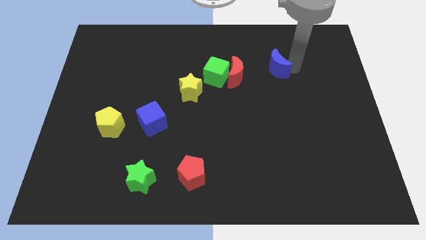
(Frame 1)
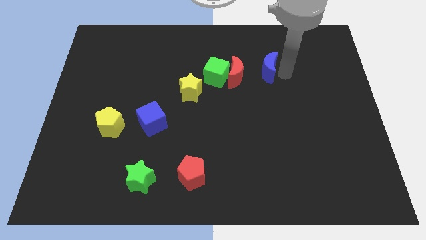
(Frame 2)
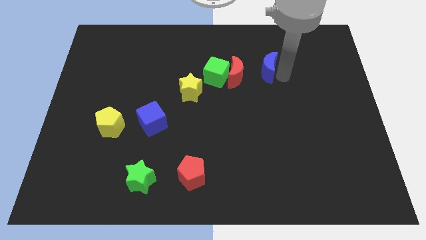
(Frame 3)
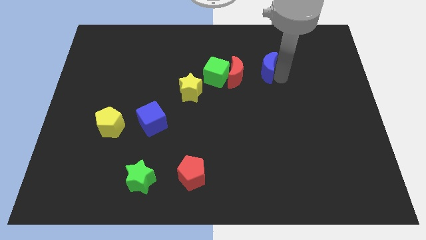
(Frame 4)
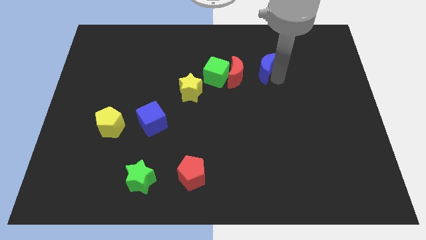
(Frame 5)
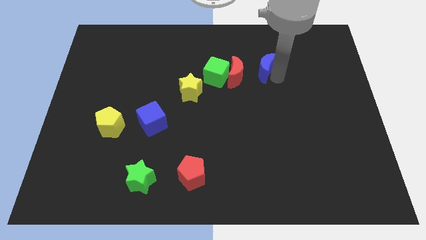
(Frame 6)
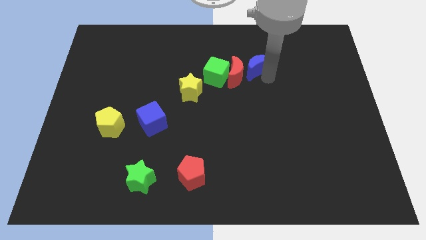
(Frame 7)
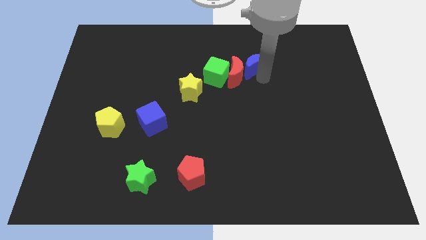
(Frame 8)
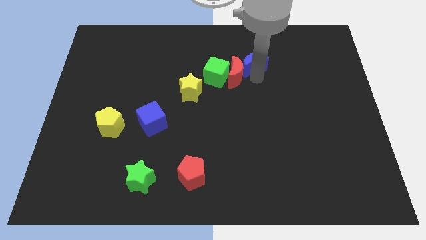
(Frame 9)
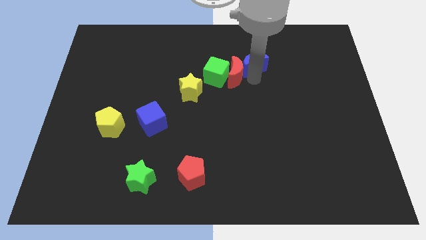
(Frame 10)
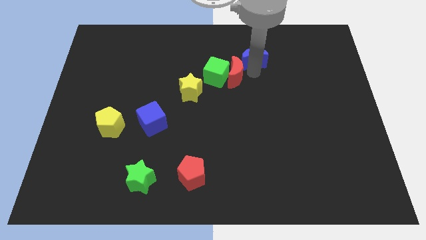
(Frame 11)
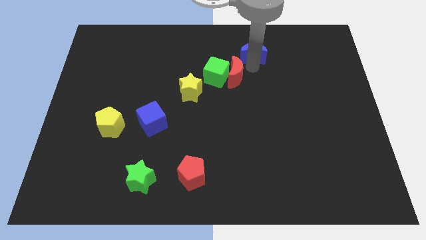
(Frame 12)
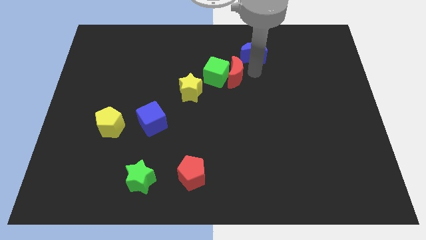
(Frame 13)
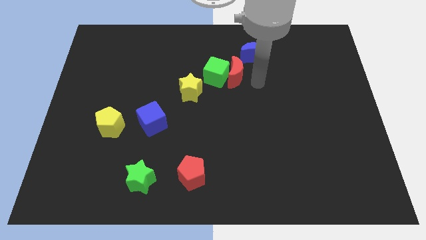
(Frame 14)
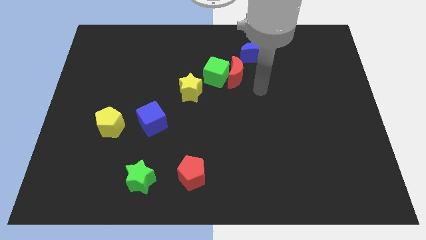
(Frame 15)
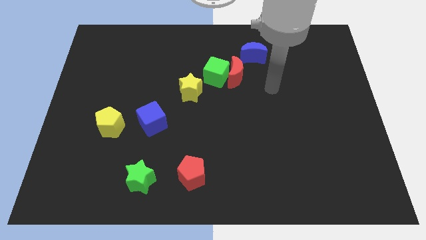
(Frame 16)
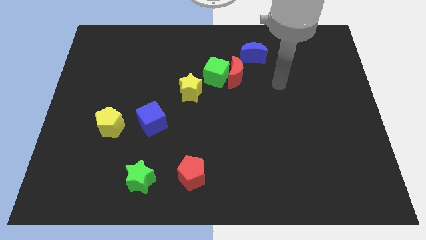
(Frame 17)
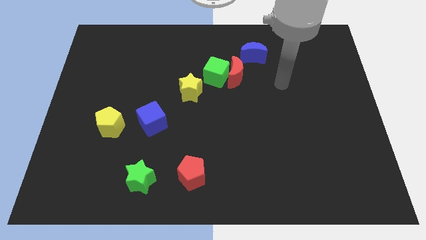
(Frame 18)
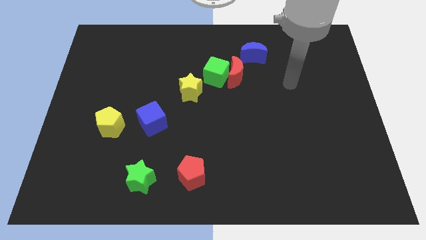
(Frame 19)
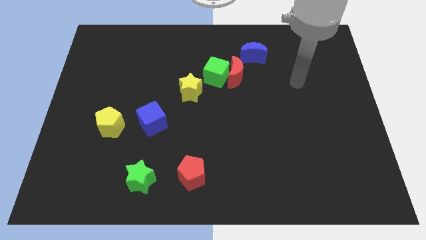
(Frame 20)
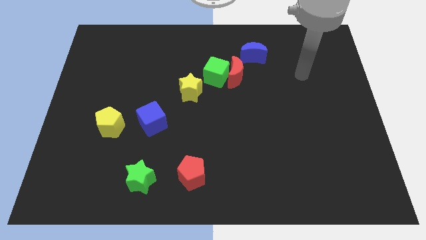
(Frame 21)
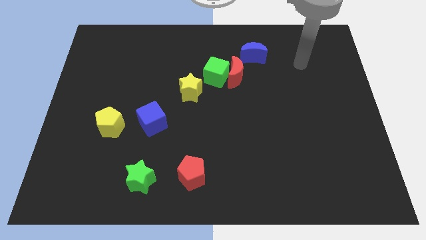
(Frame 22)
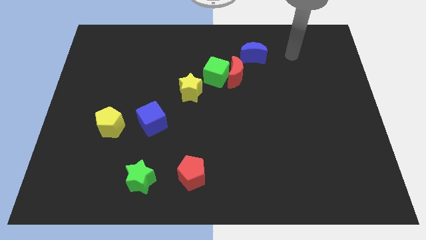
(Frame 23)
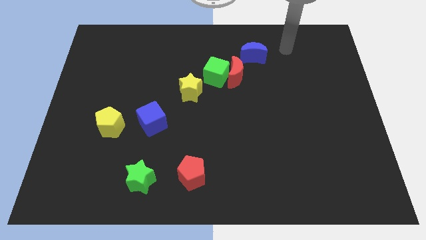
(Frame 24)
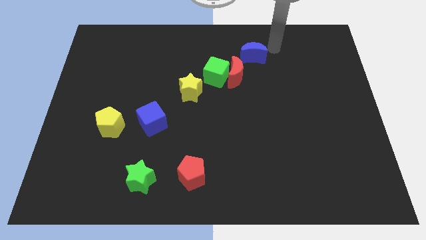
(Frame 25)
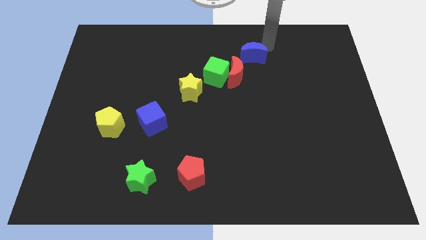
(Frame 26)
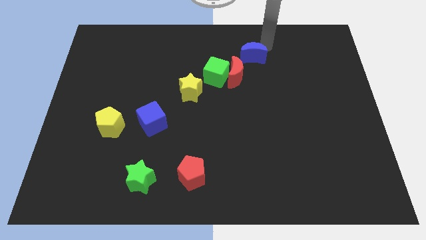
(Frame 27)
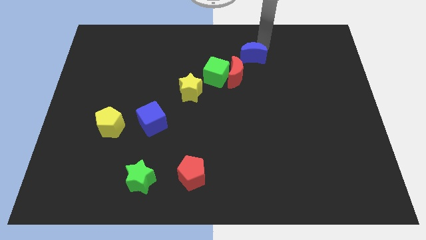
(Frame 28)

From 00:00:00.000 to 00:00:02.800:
move blue moon towards red moon

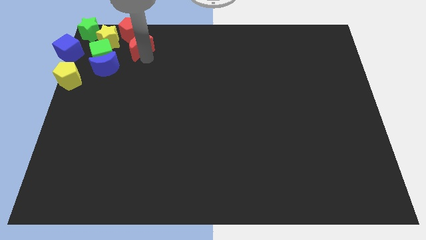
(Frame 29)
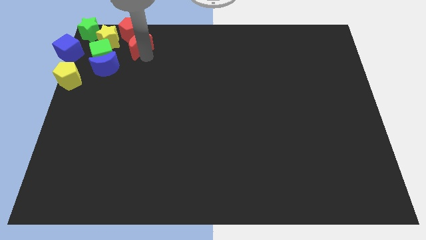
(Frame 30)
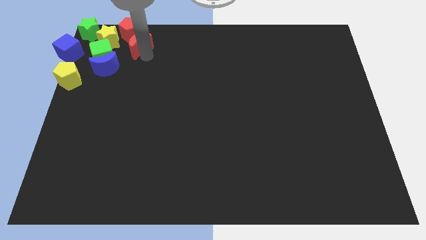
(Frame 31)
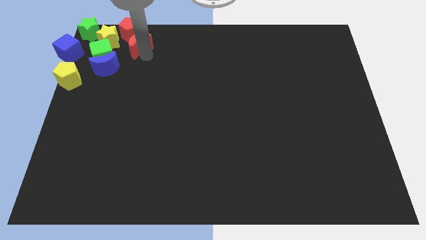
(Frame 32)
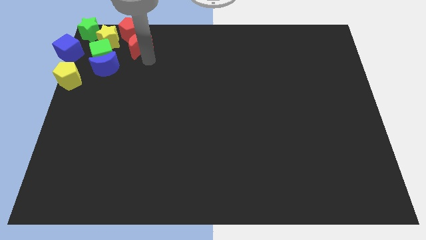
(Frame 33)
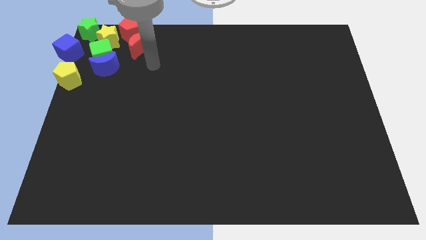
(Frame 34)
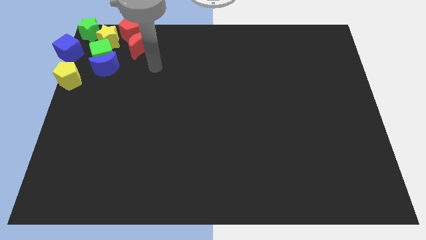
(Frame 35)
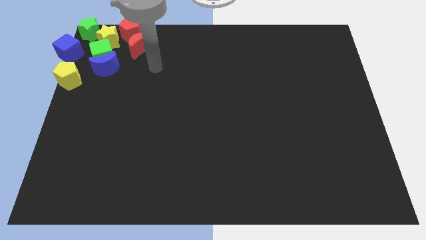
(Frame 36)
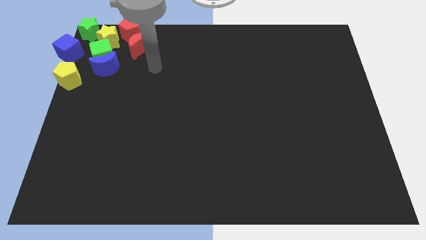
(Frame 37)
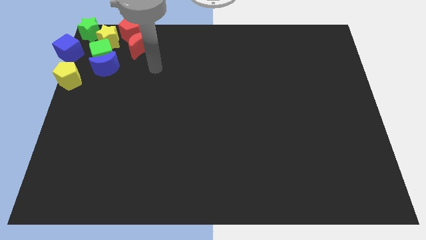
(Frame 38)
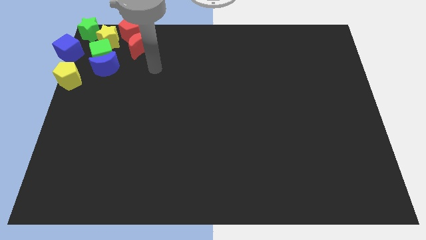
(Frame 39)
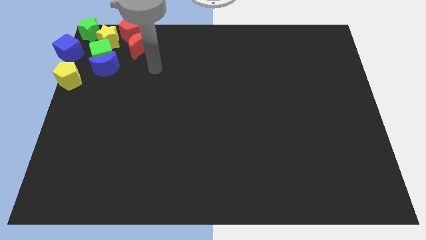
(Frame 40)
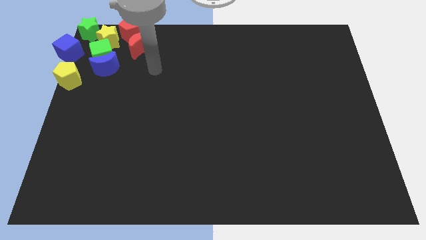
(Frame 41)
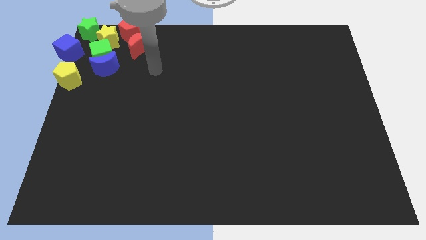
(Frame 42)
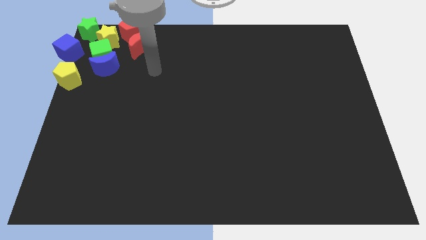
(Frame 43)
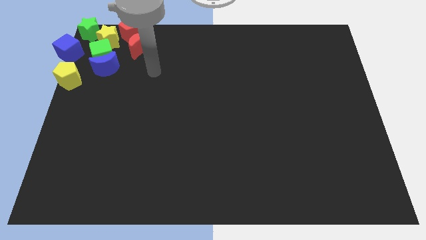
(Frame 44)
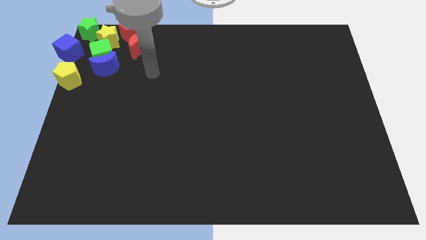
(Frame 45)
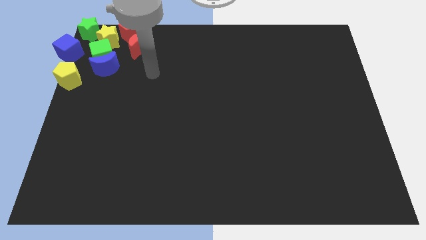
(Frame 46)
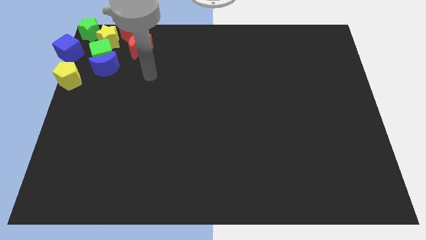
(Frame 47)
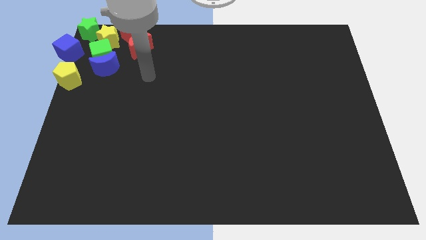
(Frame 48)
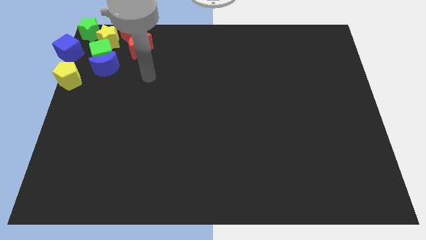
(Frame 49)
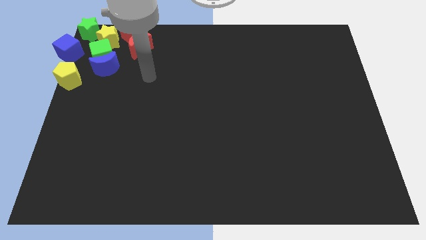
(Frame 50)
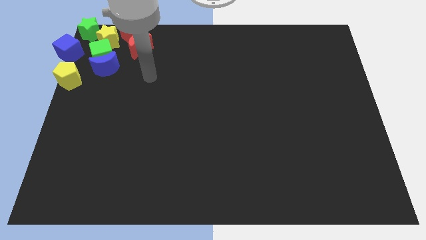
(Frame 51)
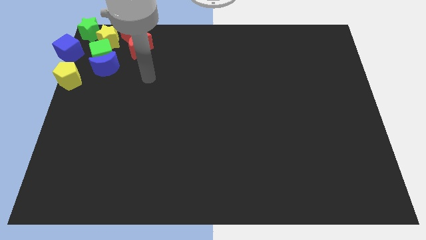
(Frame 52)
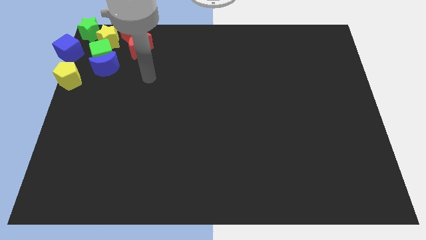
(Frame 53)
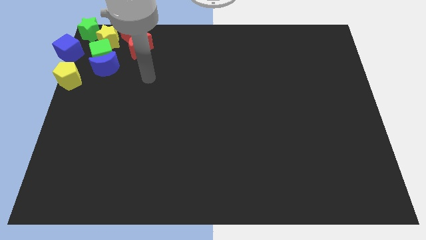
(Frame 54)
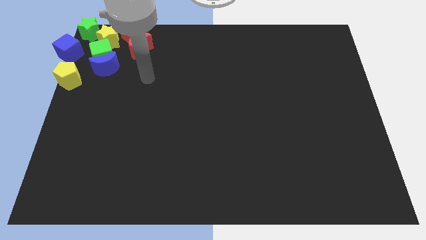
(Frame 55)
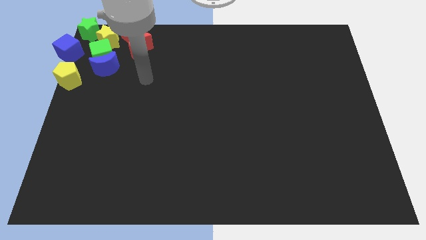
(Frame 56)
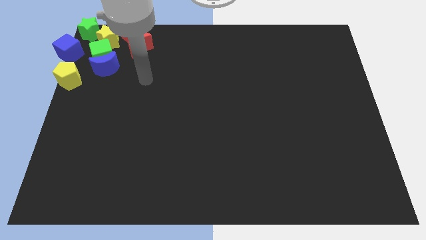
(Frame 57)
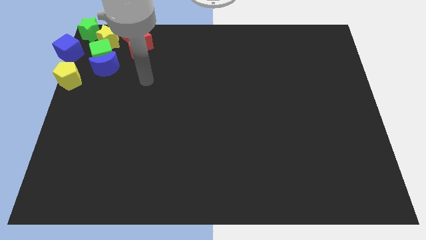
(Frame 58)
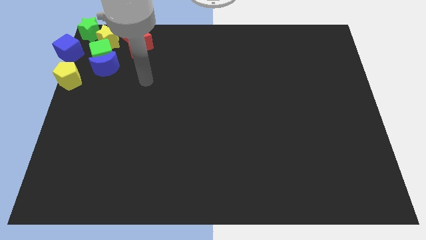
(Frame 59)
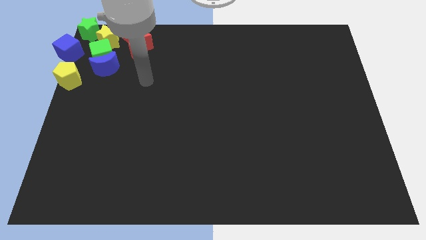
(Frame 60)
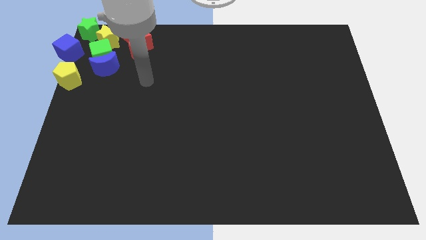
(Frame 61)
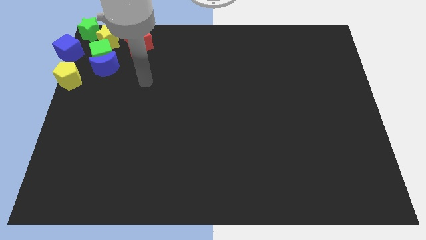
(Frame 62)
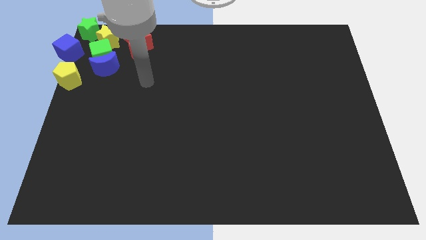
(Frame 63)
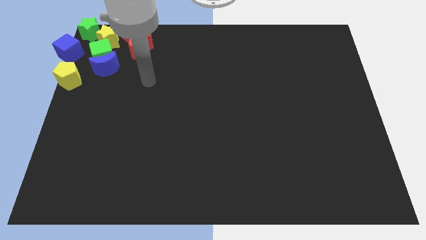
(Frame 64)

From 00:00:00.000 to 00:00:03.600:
slightly adjust the red crescent close to red pentagon

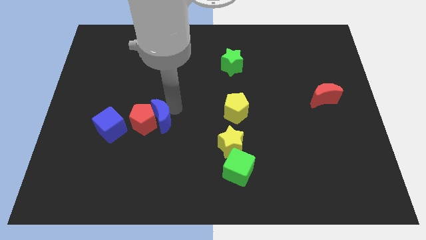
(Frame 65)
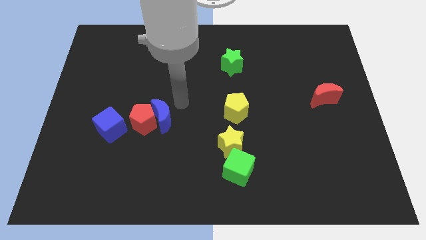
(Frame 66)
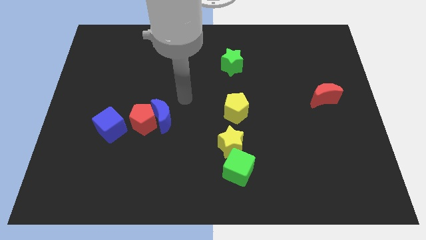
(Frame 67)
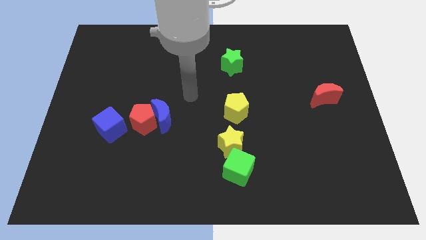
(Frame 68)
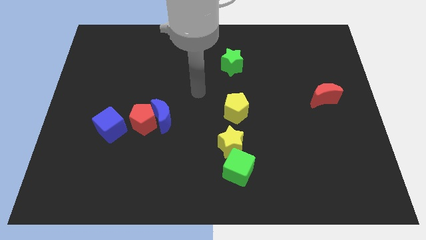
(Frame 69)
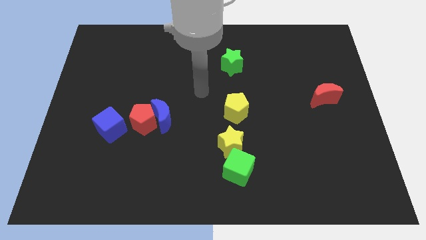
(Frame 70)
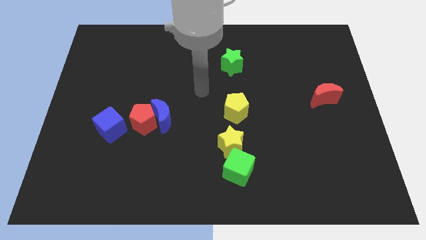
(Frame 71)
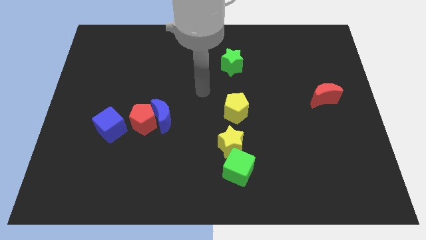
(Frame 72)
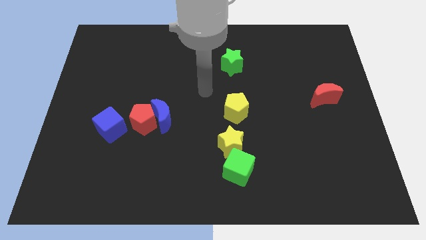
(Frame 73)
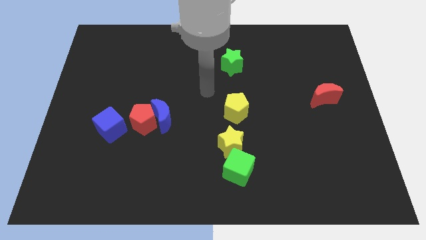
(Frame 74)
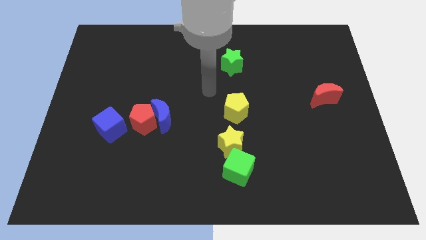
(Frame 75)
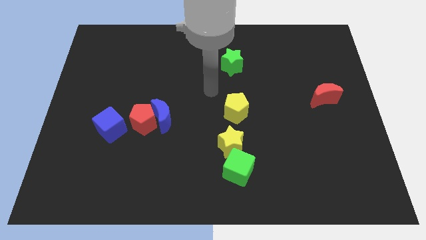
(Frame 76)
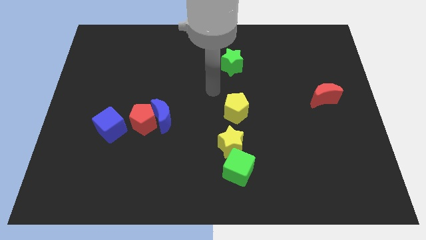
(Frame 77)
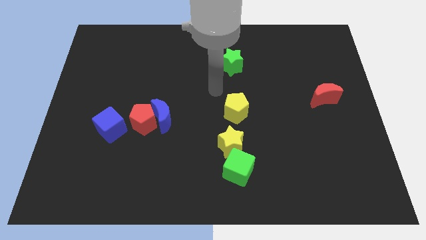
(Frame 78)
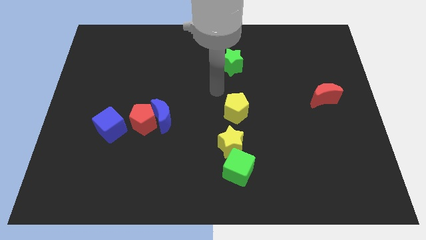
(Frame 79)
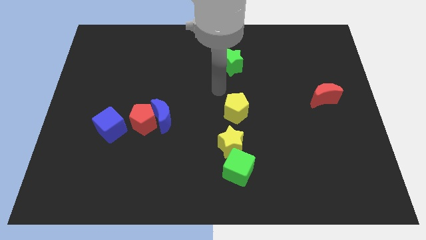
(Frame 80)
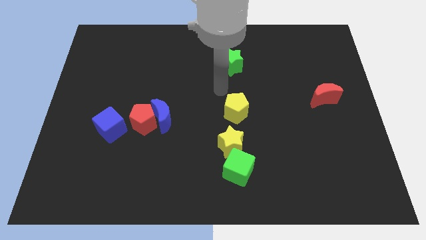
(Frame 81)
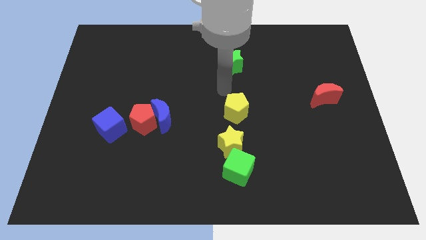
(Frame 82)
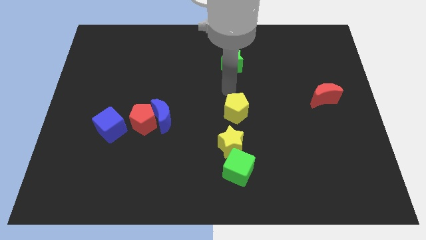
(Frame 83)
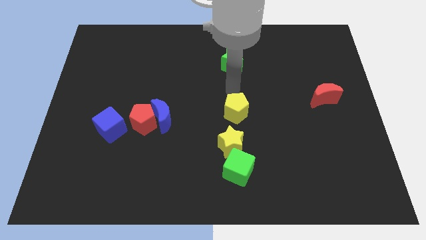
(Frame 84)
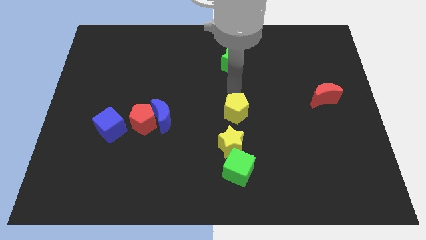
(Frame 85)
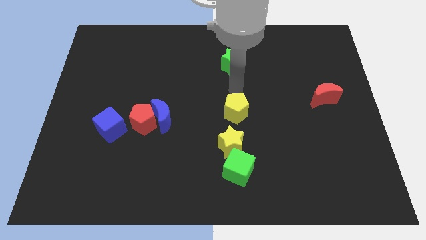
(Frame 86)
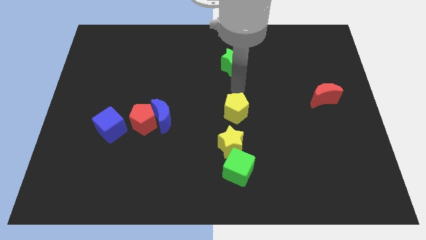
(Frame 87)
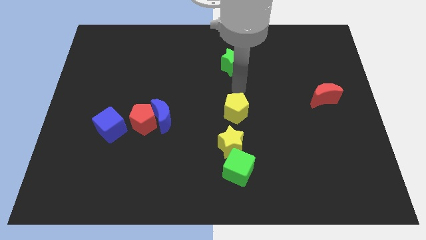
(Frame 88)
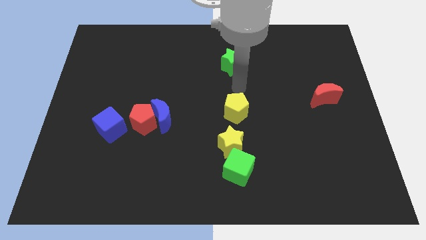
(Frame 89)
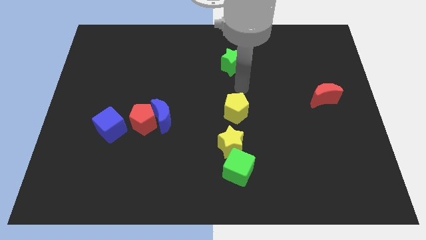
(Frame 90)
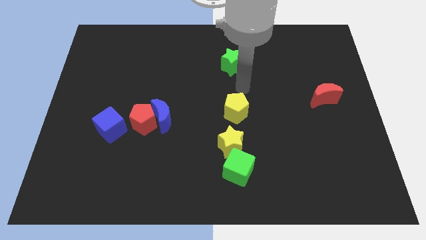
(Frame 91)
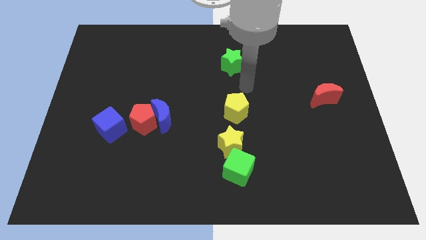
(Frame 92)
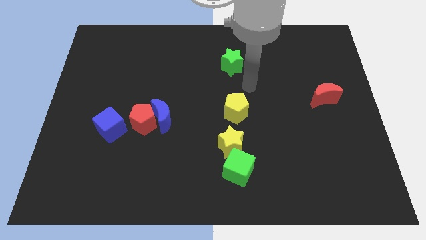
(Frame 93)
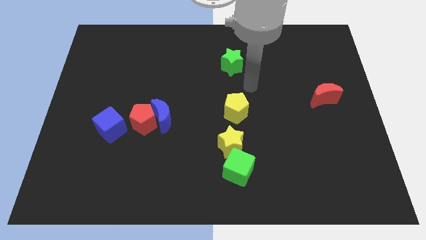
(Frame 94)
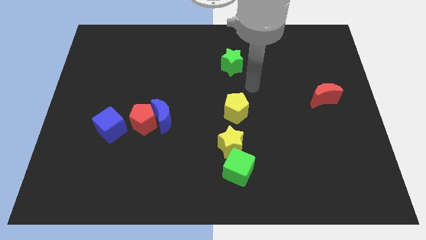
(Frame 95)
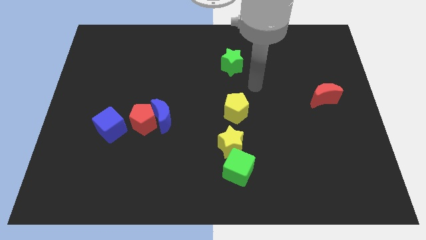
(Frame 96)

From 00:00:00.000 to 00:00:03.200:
move your arm towards the yellow pentagon
